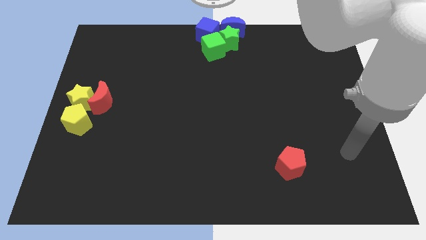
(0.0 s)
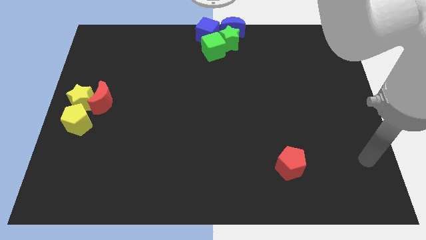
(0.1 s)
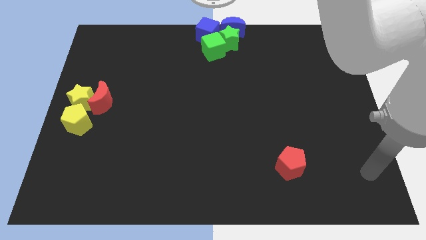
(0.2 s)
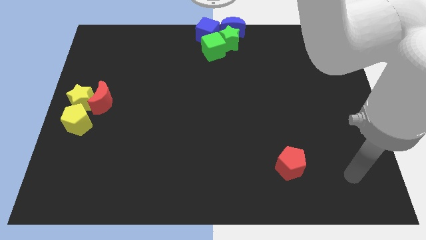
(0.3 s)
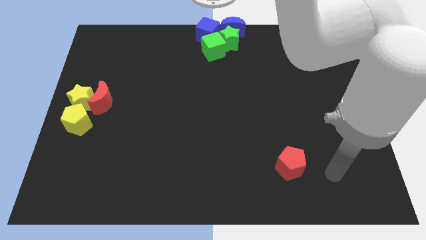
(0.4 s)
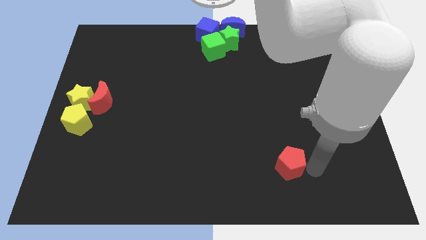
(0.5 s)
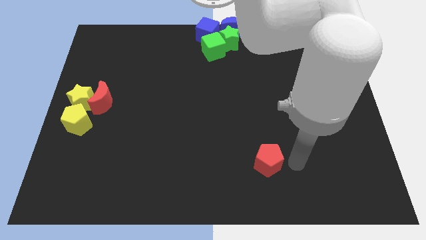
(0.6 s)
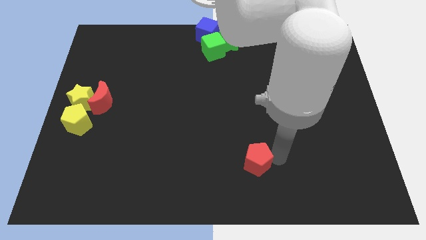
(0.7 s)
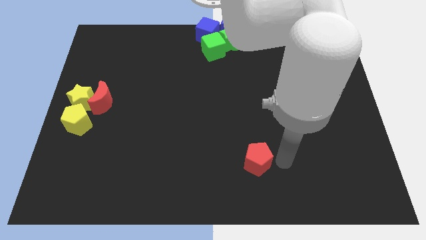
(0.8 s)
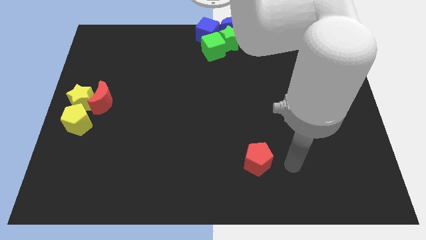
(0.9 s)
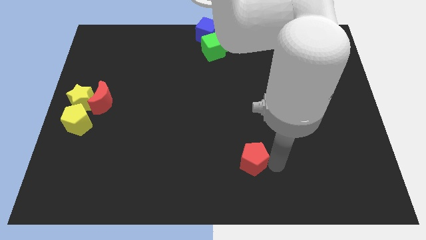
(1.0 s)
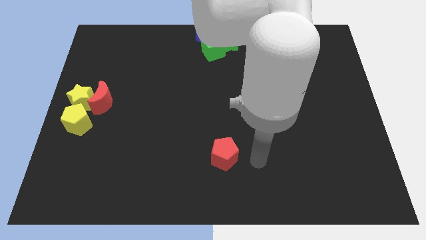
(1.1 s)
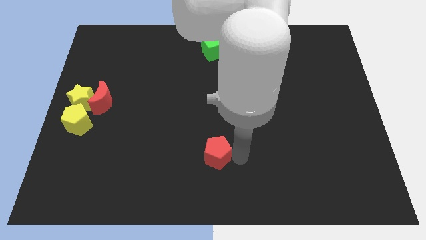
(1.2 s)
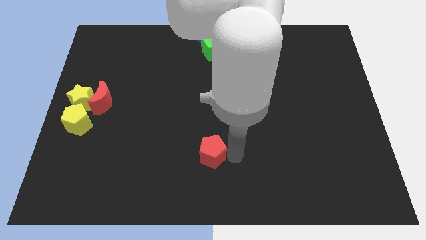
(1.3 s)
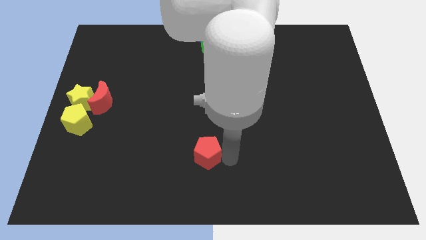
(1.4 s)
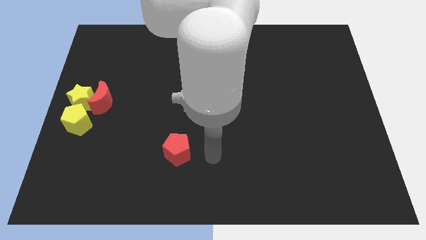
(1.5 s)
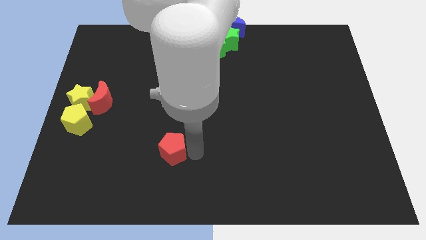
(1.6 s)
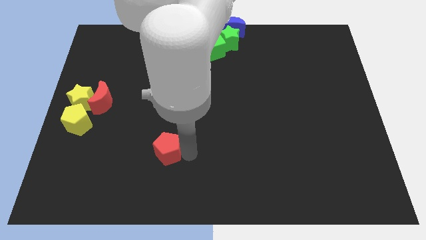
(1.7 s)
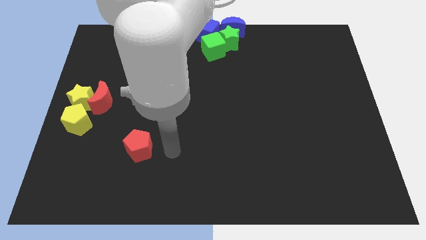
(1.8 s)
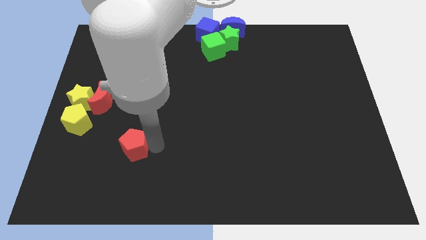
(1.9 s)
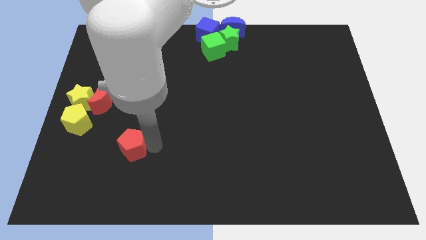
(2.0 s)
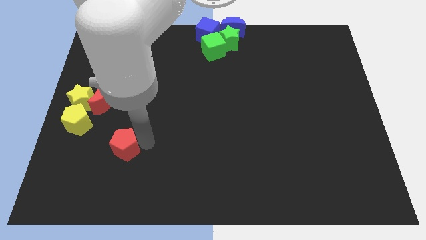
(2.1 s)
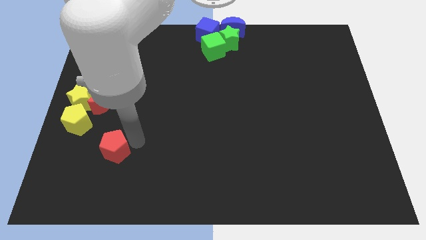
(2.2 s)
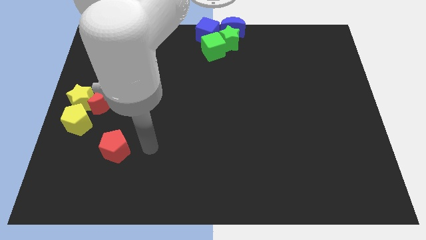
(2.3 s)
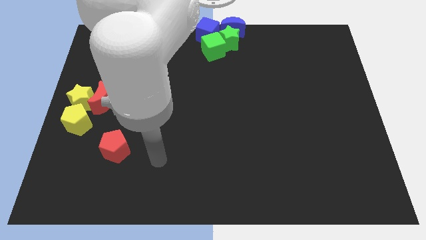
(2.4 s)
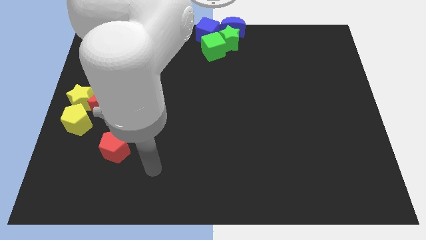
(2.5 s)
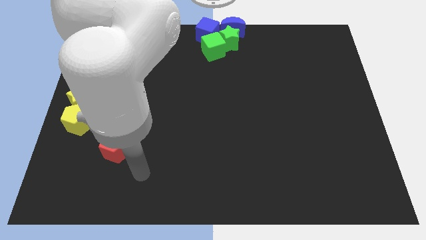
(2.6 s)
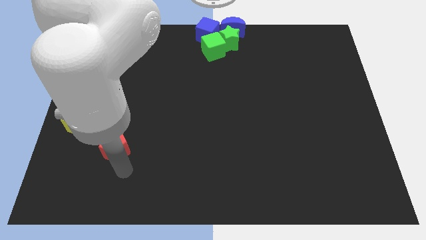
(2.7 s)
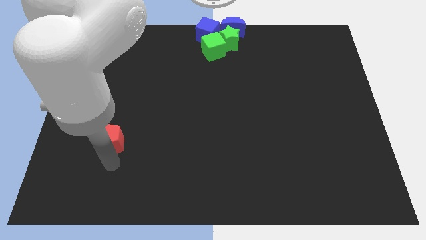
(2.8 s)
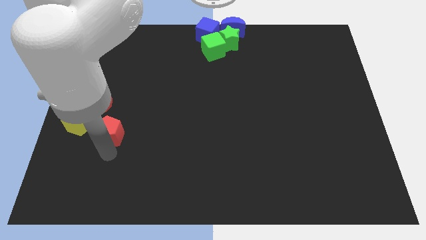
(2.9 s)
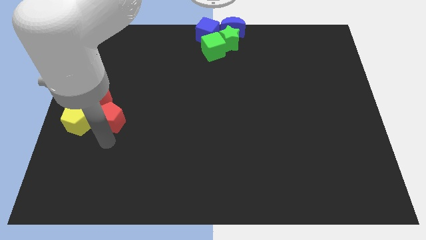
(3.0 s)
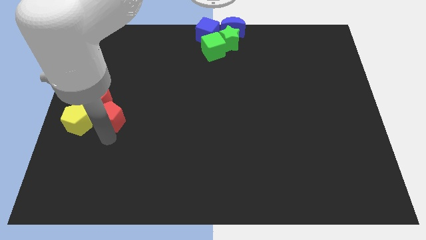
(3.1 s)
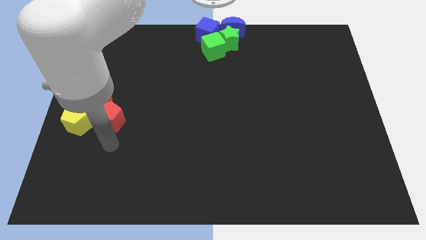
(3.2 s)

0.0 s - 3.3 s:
push the red pentagon towards the left side of the board

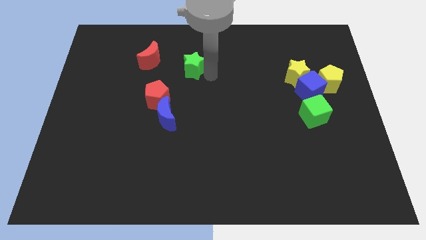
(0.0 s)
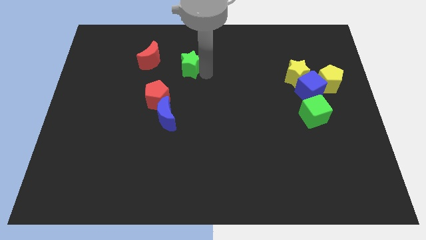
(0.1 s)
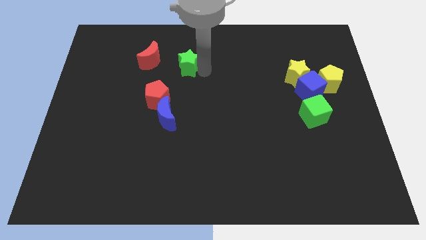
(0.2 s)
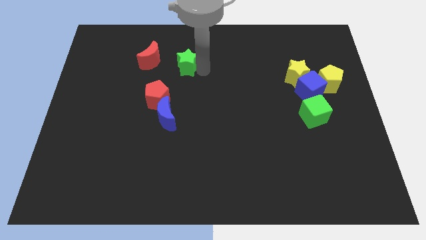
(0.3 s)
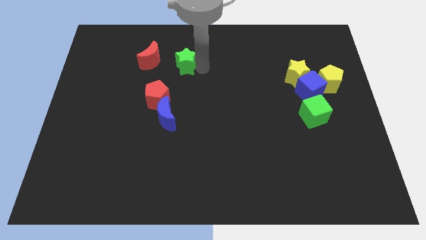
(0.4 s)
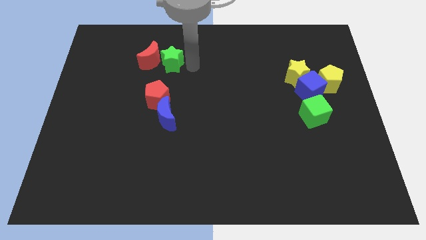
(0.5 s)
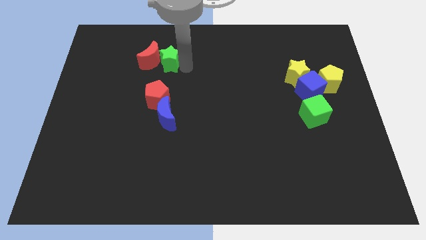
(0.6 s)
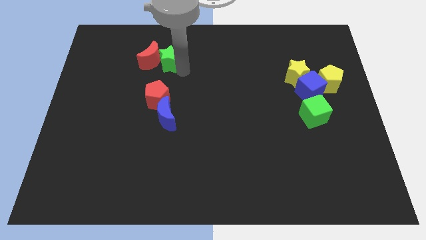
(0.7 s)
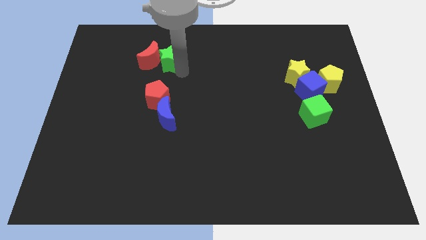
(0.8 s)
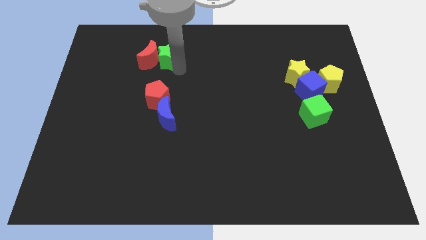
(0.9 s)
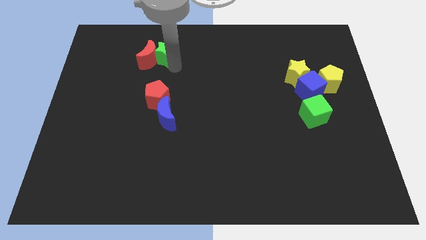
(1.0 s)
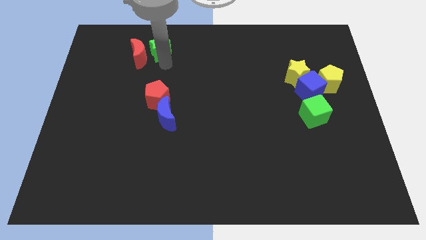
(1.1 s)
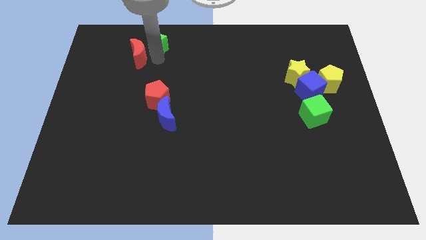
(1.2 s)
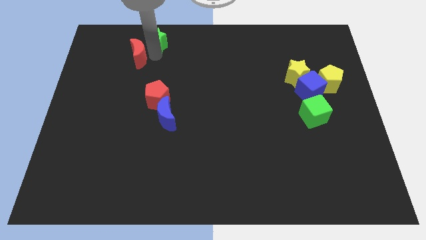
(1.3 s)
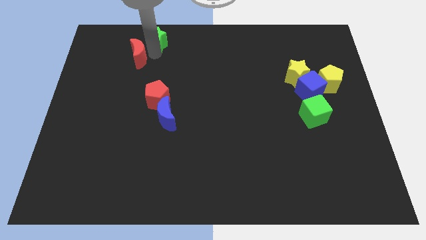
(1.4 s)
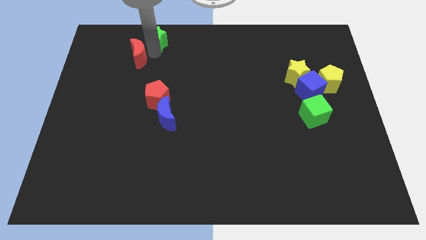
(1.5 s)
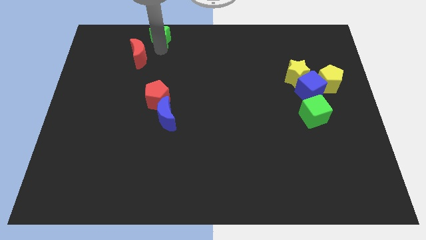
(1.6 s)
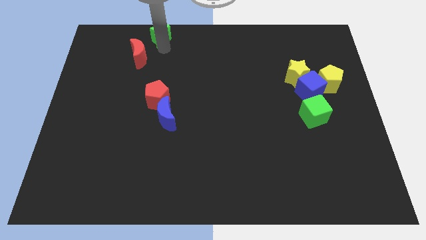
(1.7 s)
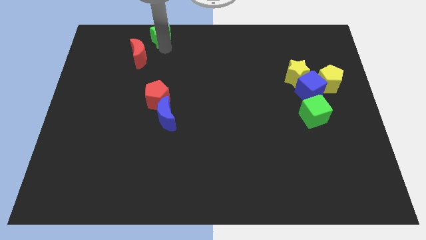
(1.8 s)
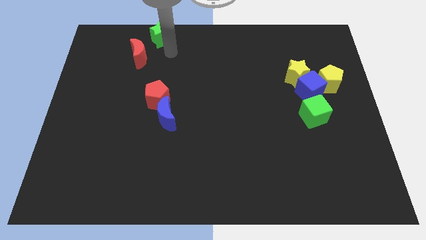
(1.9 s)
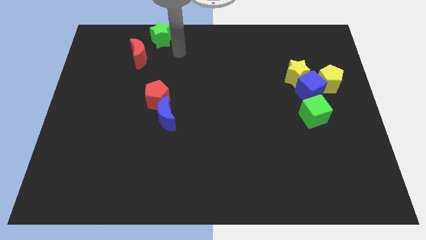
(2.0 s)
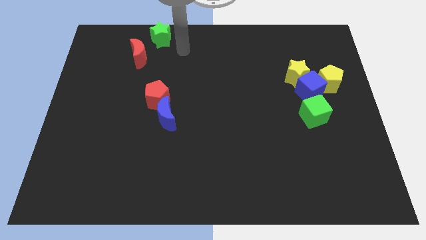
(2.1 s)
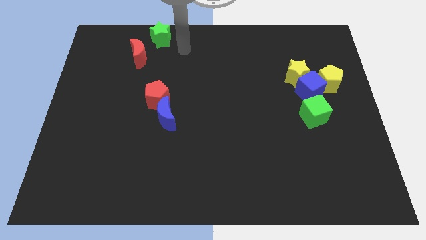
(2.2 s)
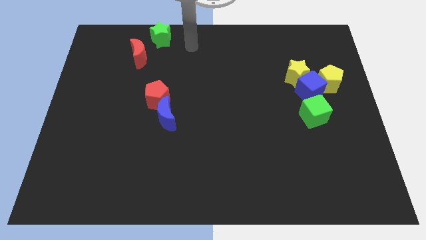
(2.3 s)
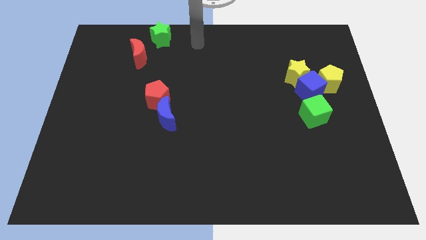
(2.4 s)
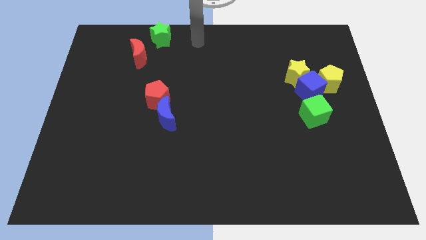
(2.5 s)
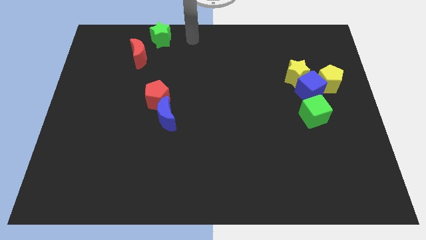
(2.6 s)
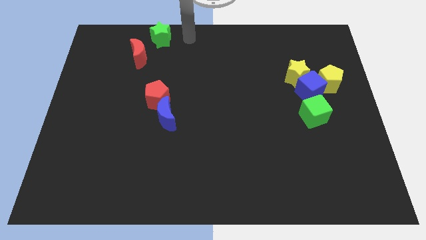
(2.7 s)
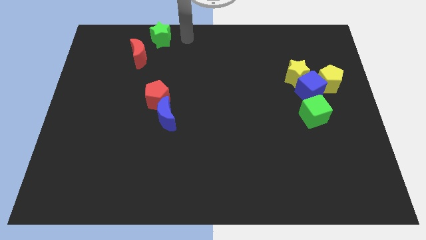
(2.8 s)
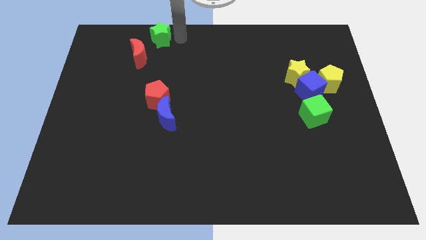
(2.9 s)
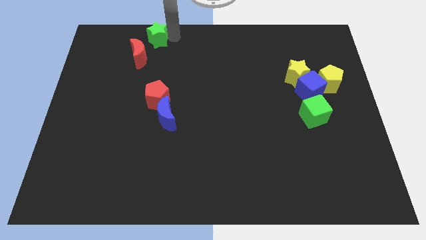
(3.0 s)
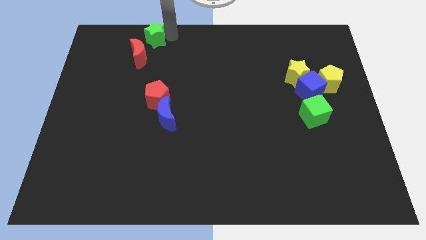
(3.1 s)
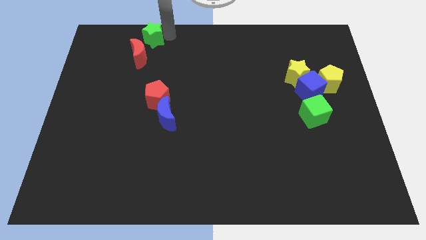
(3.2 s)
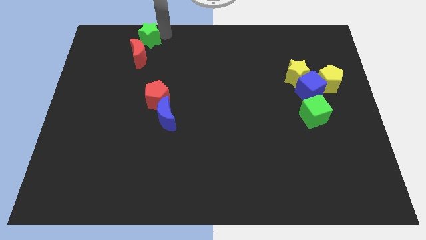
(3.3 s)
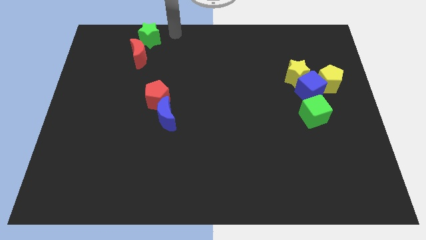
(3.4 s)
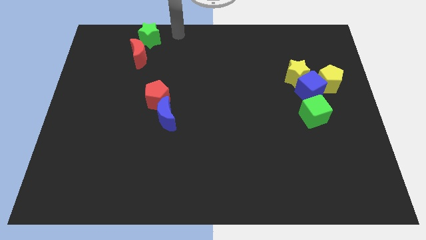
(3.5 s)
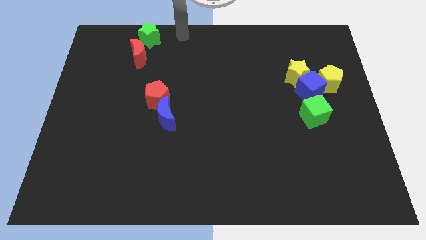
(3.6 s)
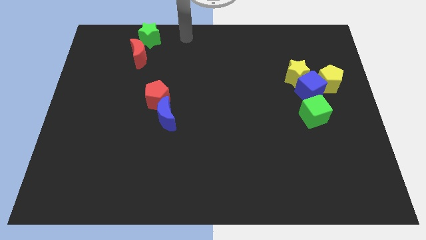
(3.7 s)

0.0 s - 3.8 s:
place the green star above the red crescent

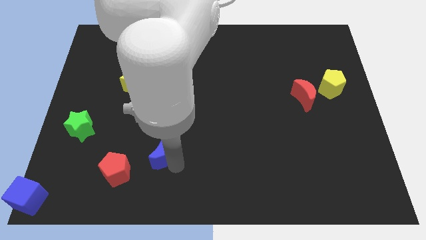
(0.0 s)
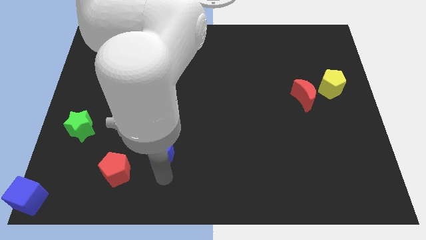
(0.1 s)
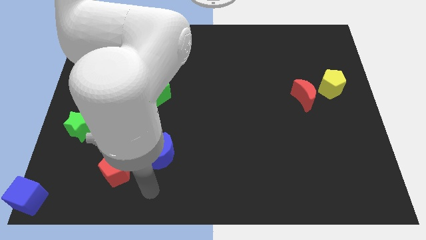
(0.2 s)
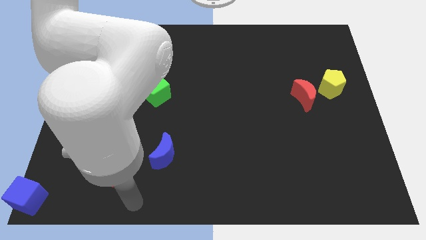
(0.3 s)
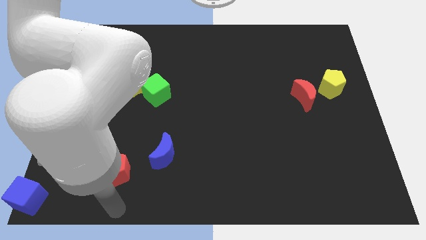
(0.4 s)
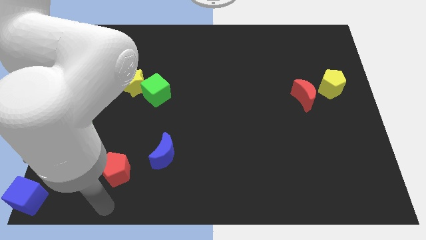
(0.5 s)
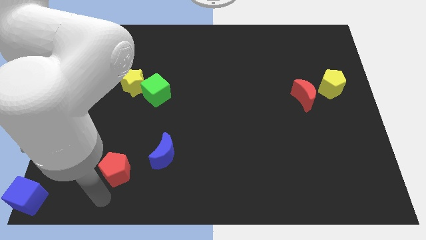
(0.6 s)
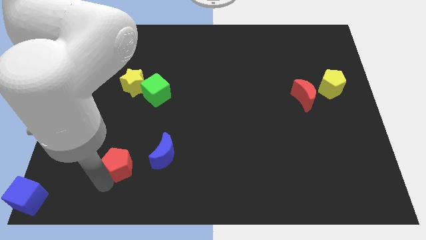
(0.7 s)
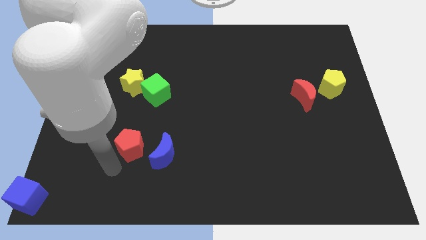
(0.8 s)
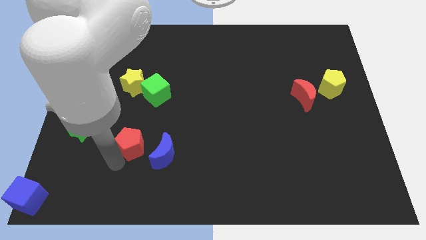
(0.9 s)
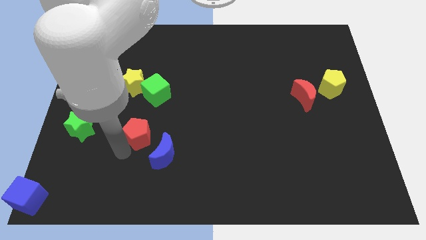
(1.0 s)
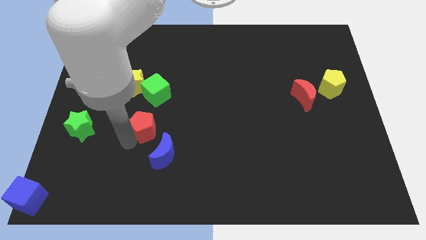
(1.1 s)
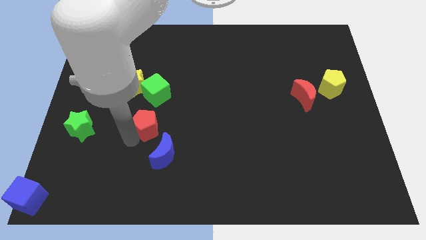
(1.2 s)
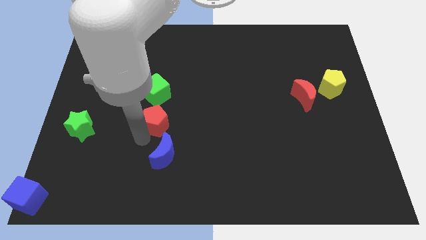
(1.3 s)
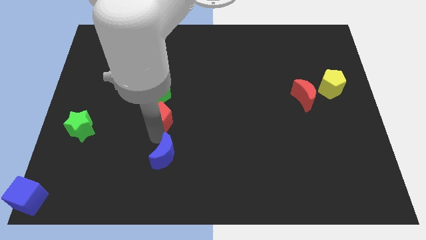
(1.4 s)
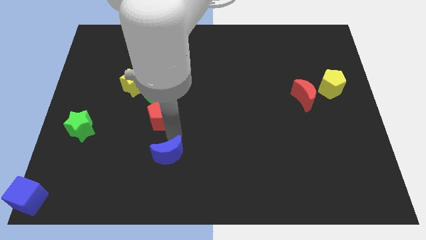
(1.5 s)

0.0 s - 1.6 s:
place the red pentagon in between the green cube and the blue moon

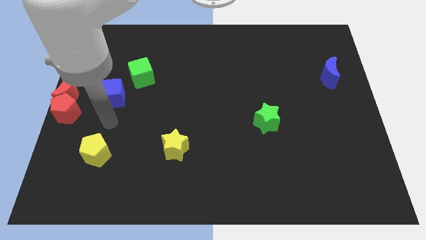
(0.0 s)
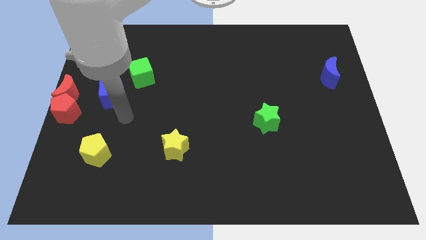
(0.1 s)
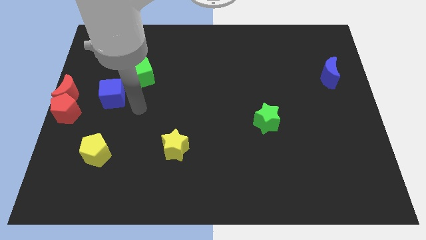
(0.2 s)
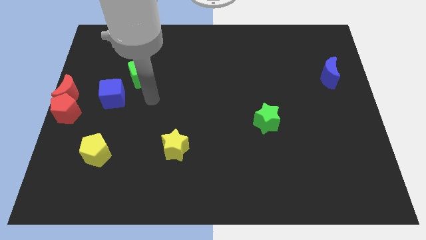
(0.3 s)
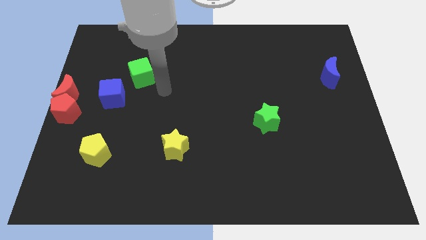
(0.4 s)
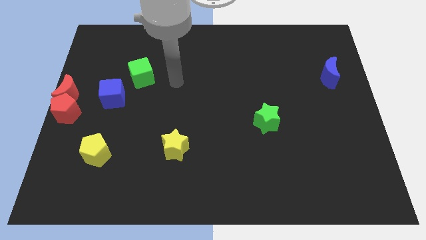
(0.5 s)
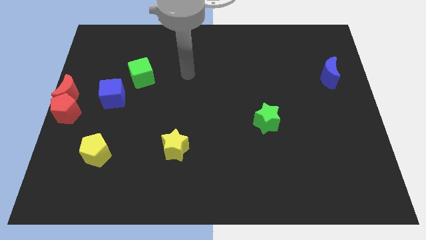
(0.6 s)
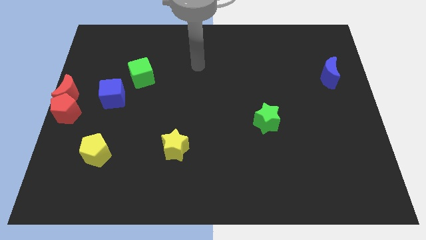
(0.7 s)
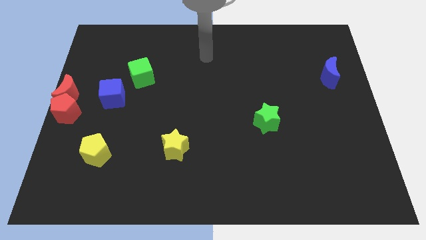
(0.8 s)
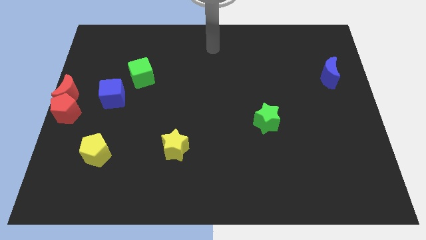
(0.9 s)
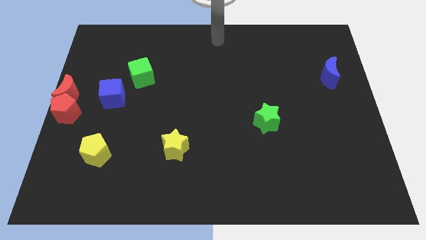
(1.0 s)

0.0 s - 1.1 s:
move the arm to the top middle
